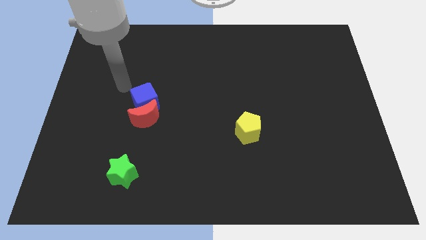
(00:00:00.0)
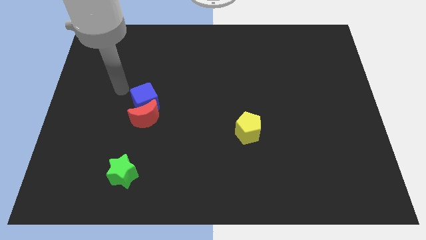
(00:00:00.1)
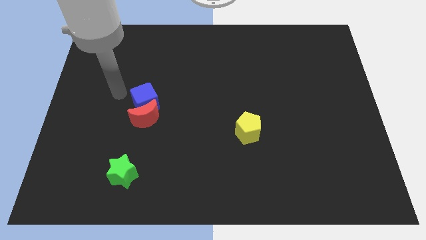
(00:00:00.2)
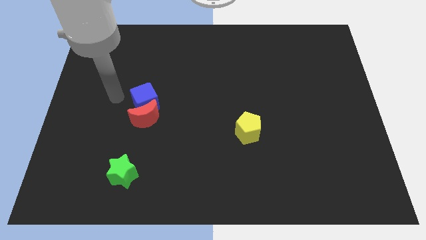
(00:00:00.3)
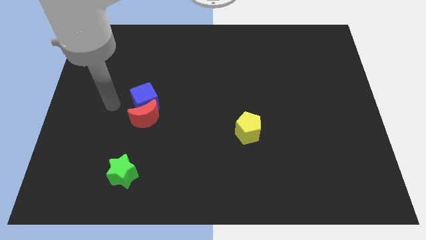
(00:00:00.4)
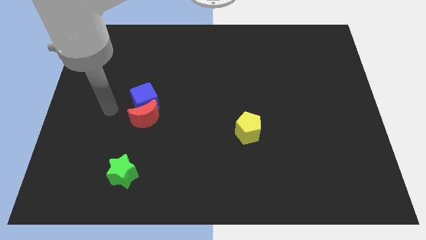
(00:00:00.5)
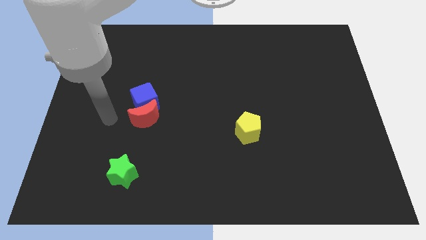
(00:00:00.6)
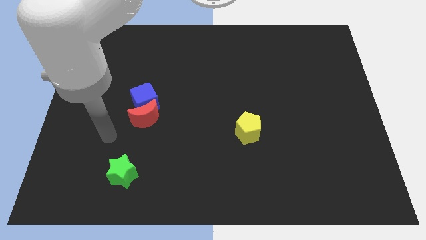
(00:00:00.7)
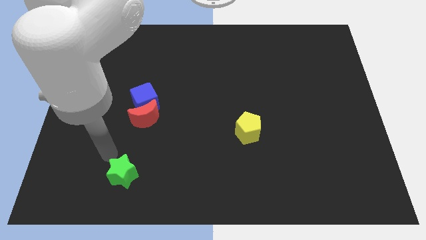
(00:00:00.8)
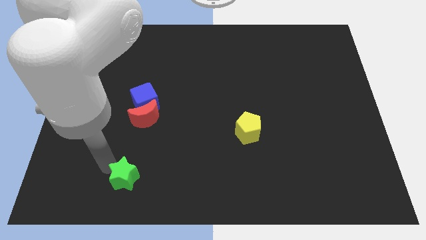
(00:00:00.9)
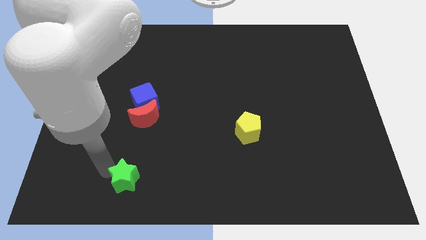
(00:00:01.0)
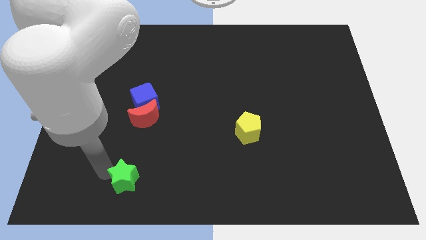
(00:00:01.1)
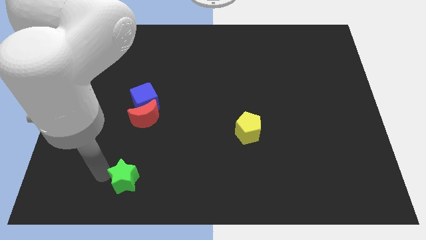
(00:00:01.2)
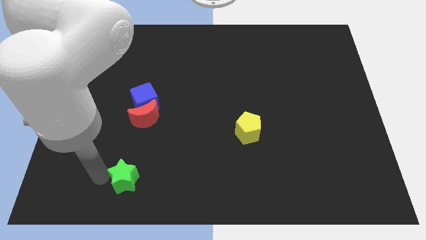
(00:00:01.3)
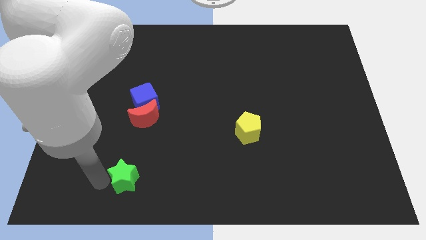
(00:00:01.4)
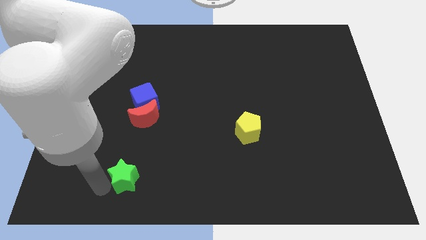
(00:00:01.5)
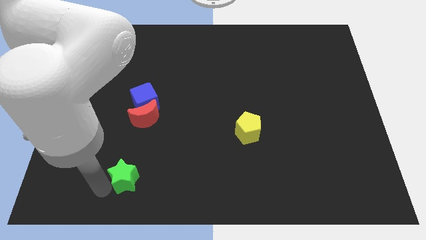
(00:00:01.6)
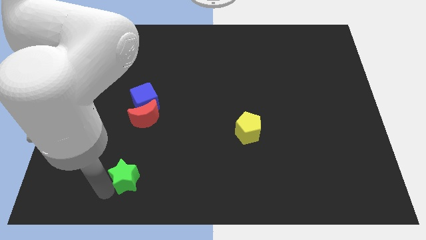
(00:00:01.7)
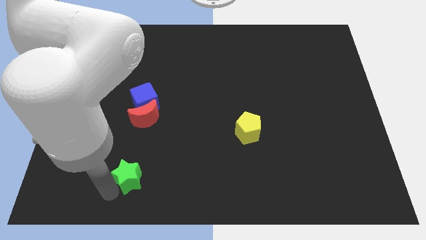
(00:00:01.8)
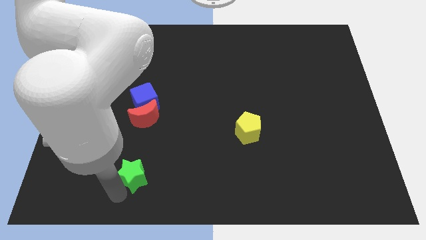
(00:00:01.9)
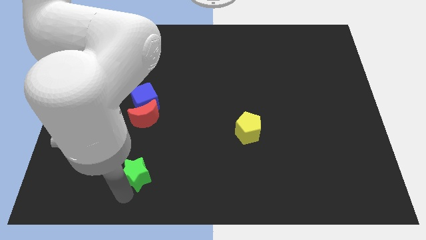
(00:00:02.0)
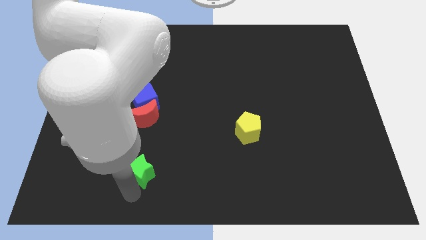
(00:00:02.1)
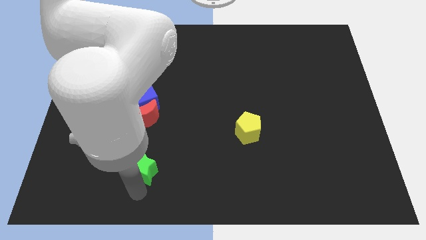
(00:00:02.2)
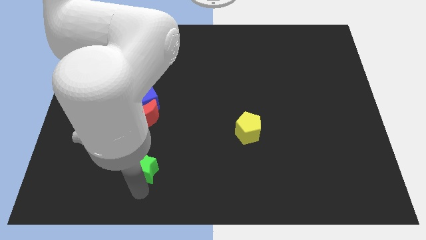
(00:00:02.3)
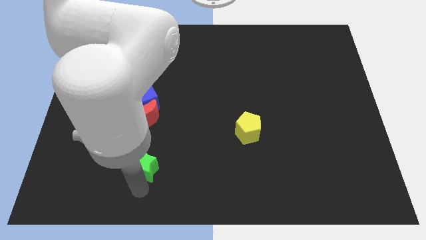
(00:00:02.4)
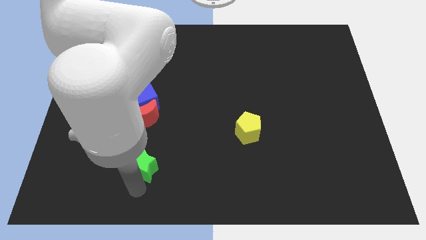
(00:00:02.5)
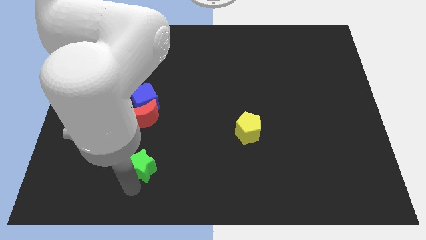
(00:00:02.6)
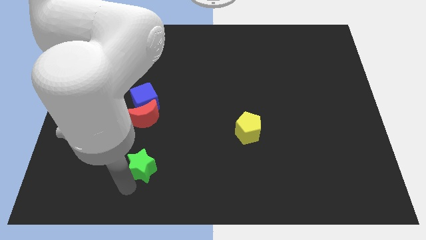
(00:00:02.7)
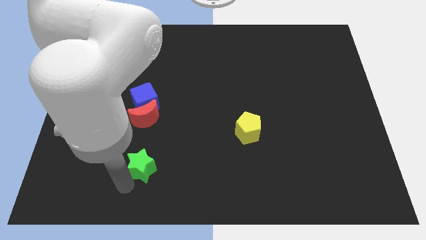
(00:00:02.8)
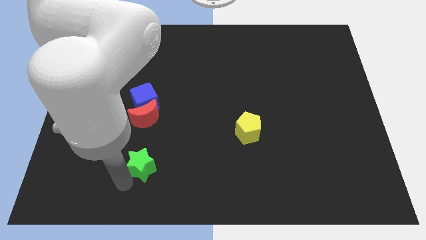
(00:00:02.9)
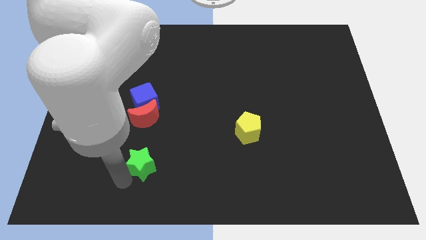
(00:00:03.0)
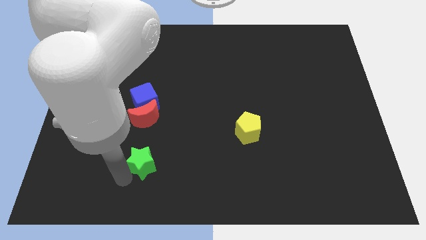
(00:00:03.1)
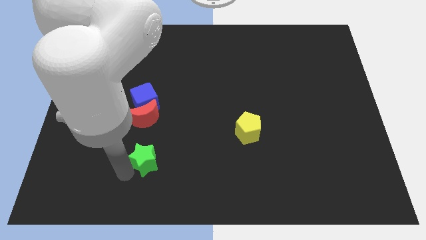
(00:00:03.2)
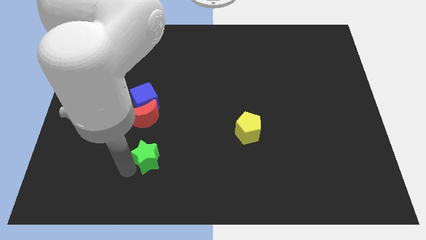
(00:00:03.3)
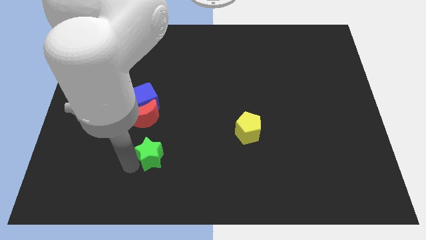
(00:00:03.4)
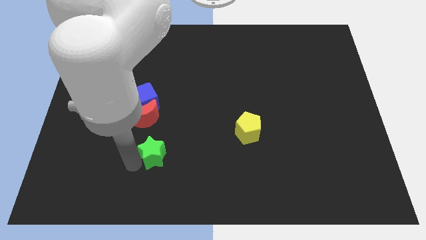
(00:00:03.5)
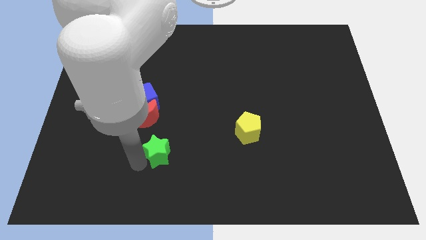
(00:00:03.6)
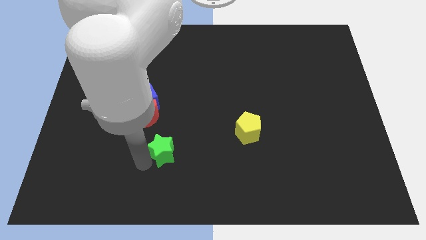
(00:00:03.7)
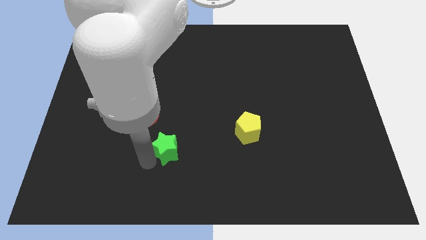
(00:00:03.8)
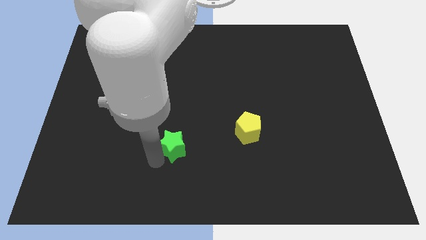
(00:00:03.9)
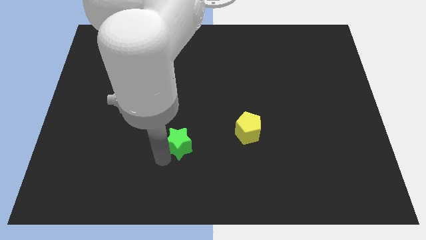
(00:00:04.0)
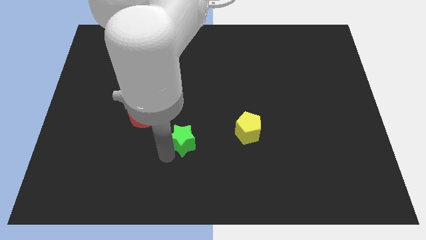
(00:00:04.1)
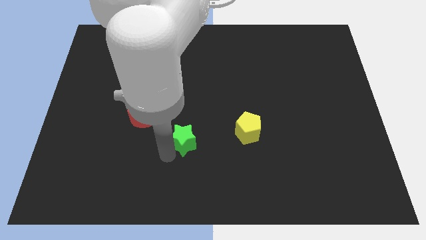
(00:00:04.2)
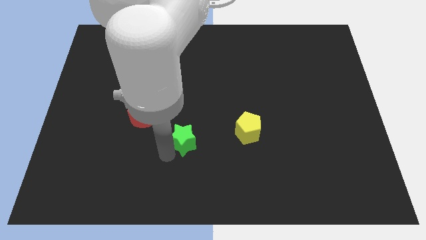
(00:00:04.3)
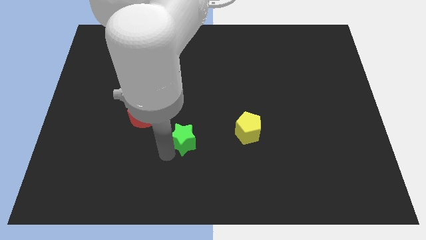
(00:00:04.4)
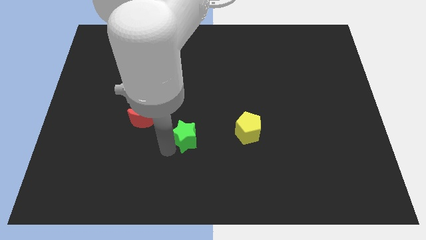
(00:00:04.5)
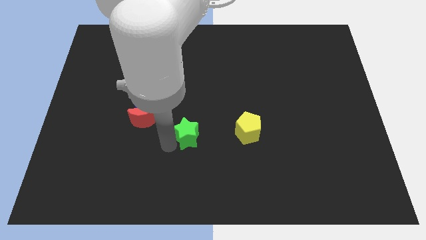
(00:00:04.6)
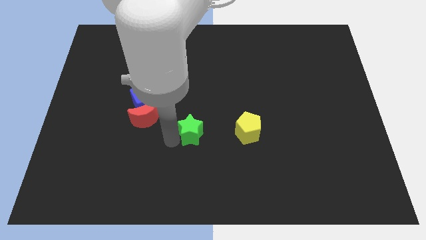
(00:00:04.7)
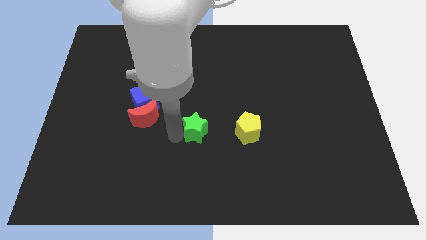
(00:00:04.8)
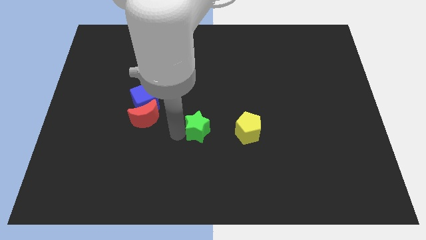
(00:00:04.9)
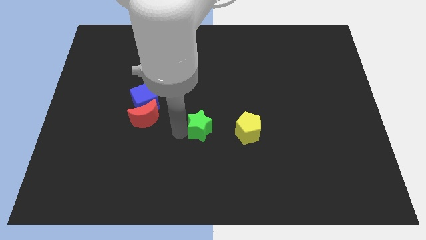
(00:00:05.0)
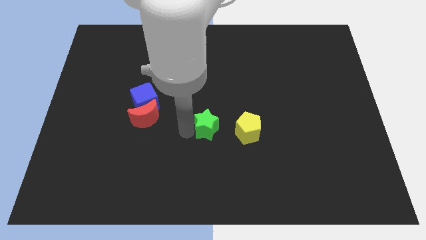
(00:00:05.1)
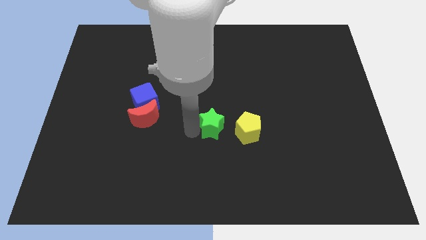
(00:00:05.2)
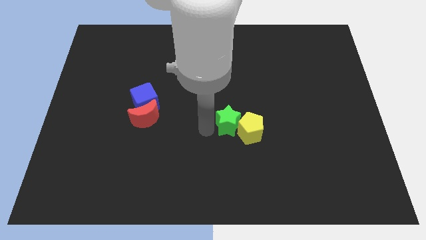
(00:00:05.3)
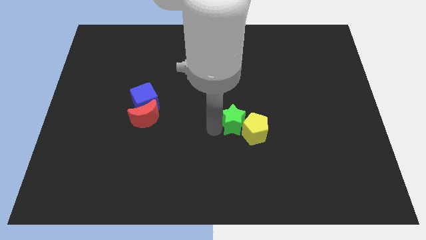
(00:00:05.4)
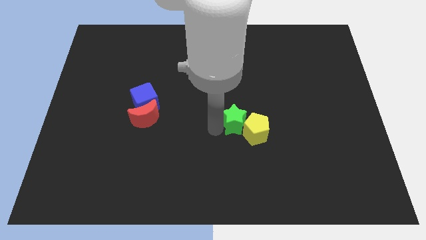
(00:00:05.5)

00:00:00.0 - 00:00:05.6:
move the star towards the pentagon

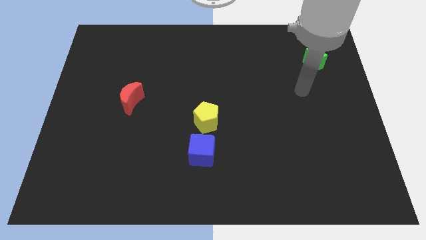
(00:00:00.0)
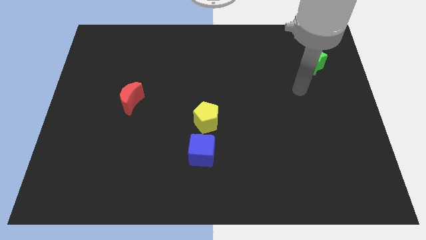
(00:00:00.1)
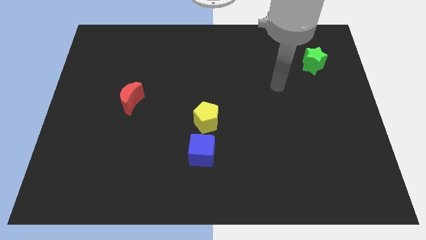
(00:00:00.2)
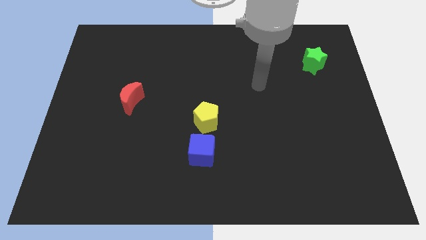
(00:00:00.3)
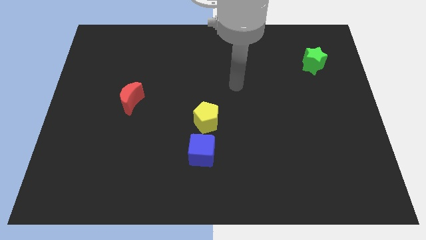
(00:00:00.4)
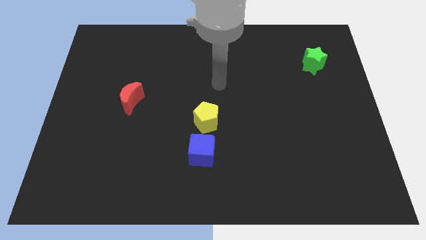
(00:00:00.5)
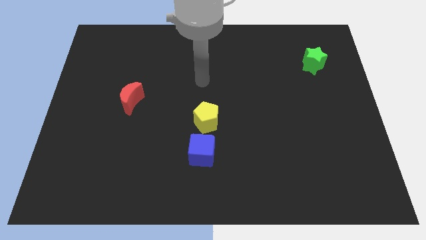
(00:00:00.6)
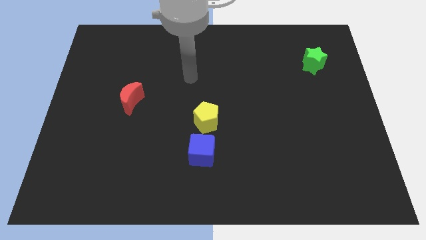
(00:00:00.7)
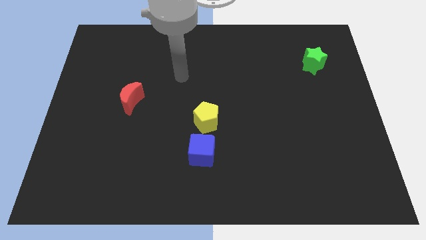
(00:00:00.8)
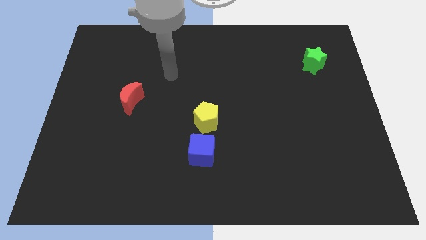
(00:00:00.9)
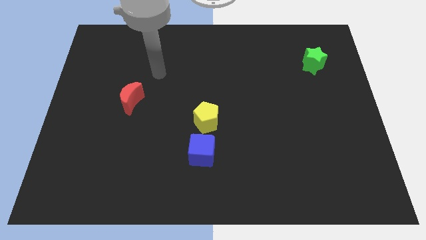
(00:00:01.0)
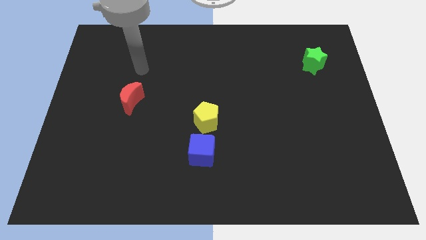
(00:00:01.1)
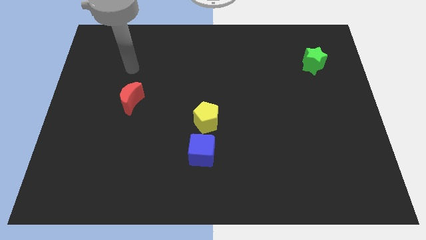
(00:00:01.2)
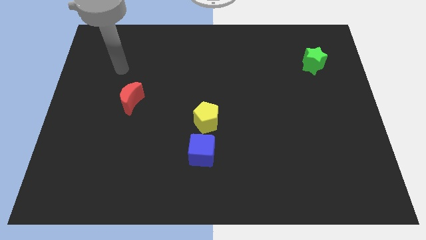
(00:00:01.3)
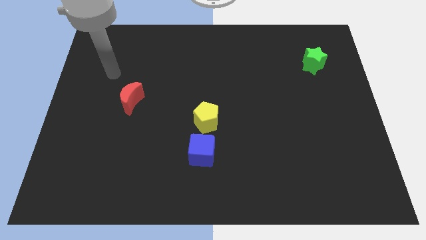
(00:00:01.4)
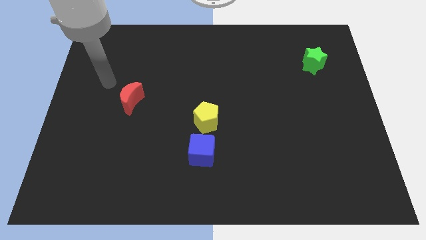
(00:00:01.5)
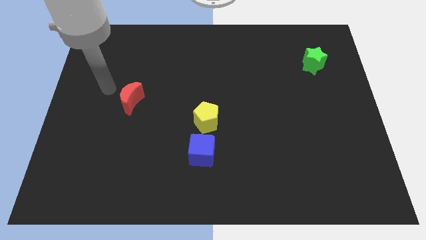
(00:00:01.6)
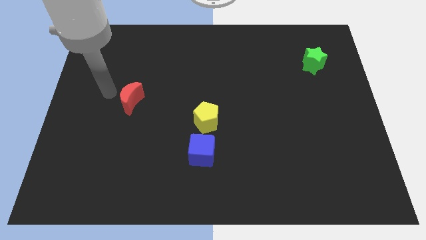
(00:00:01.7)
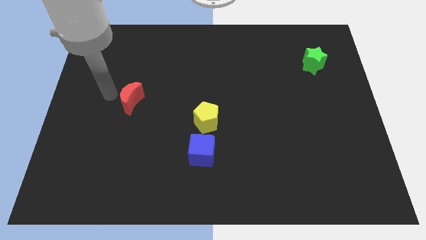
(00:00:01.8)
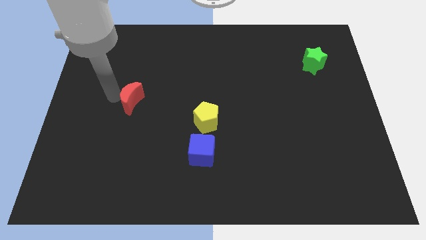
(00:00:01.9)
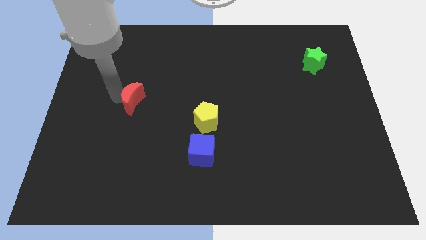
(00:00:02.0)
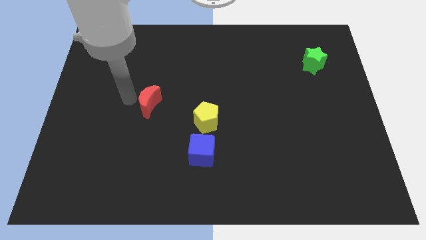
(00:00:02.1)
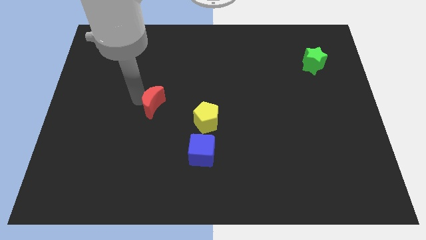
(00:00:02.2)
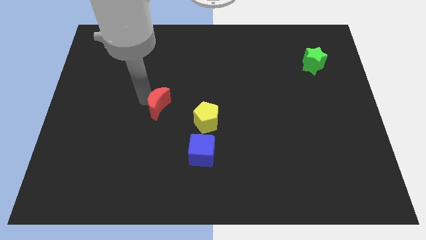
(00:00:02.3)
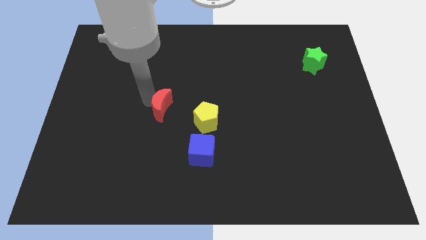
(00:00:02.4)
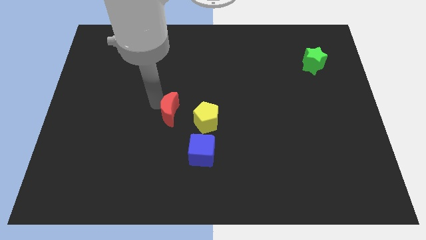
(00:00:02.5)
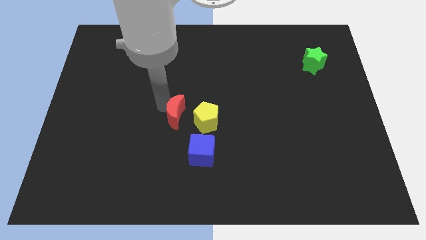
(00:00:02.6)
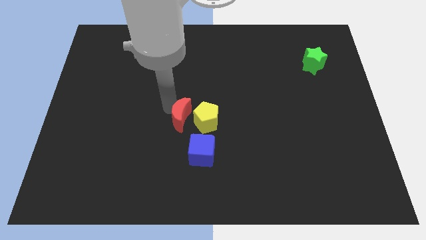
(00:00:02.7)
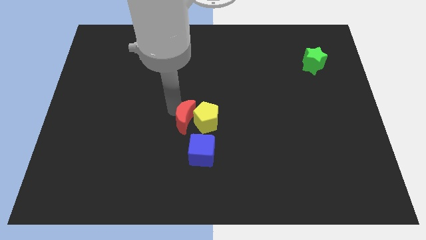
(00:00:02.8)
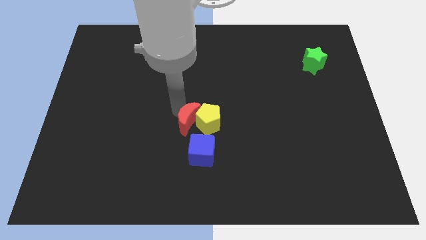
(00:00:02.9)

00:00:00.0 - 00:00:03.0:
push the moon towards the yellow pentagon
